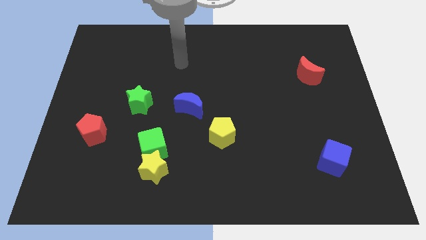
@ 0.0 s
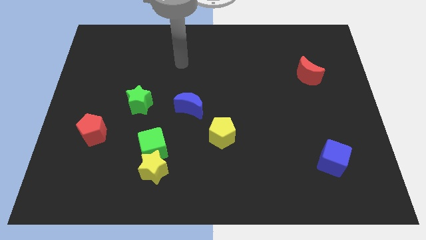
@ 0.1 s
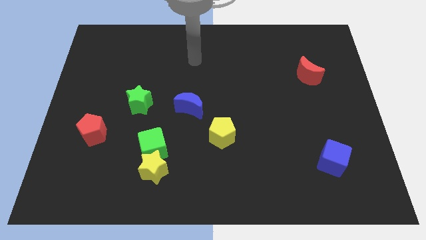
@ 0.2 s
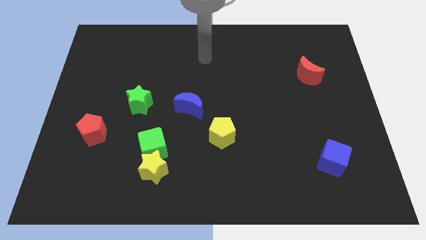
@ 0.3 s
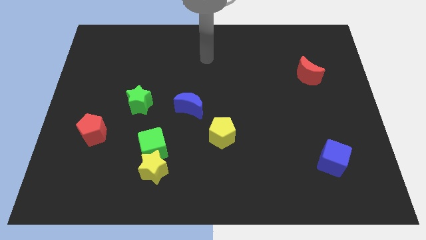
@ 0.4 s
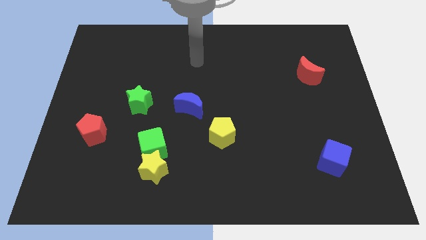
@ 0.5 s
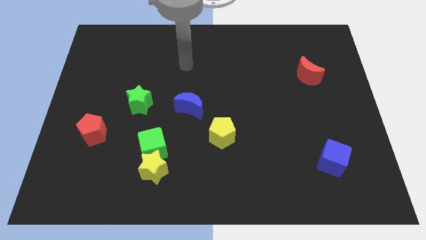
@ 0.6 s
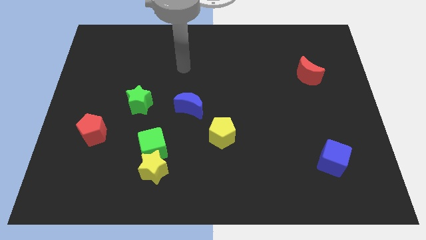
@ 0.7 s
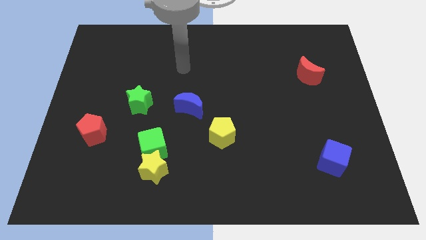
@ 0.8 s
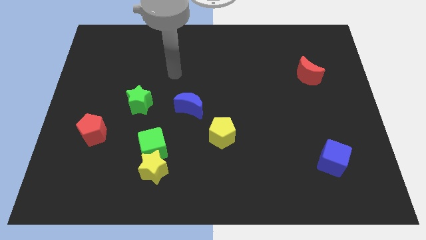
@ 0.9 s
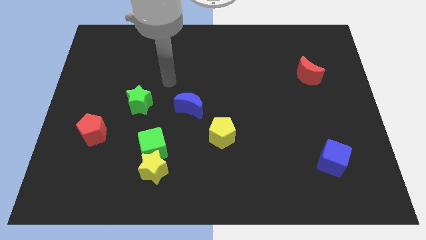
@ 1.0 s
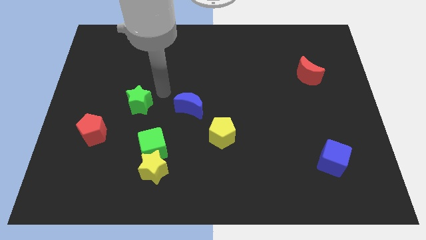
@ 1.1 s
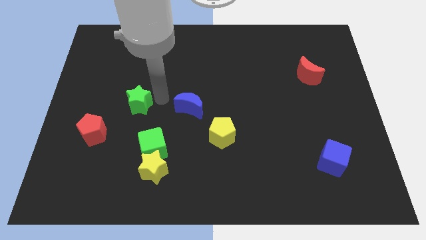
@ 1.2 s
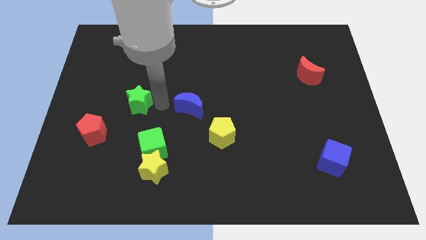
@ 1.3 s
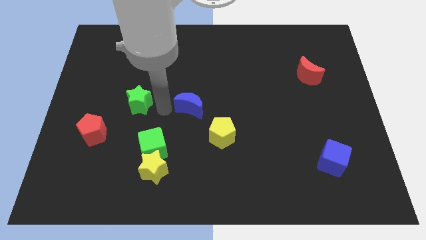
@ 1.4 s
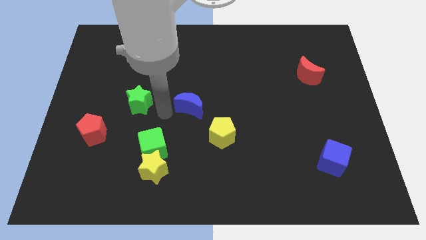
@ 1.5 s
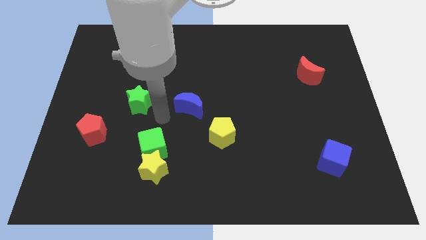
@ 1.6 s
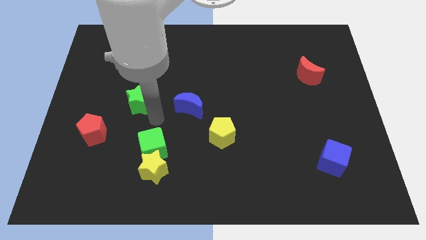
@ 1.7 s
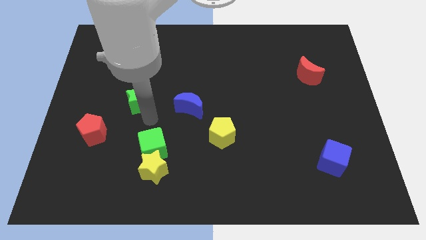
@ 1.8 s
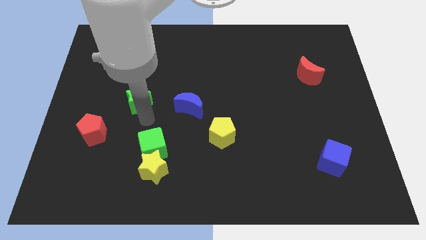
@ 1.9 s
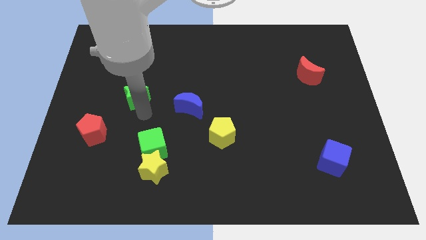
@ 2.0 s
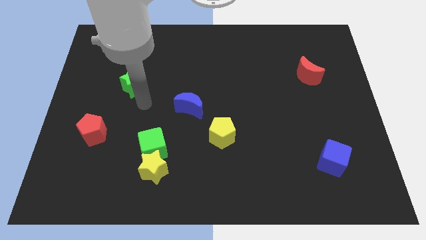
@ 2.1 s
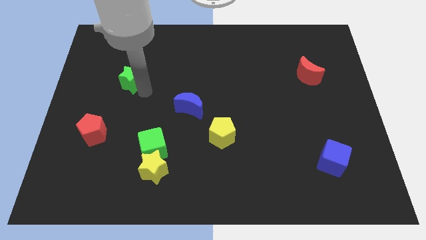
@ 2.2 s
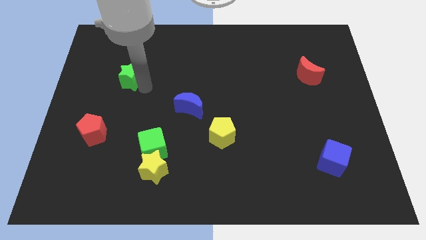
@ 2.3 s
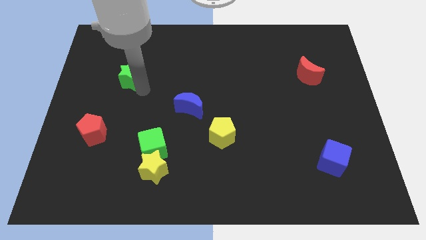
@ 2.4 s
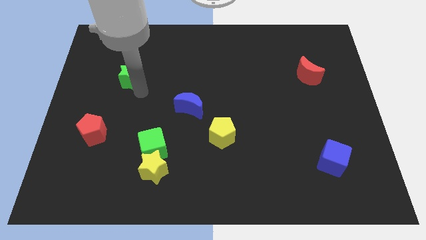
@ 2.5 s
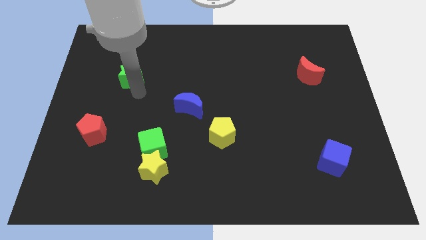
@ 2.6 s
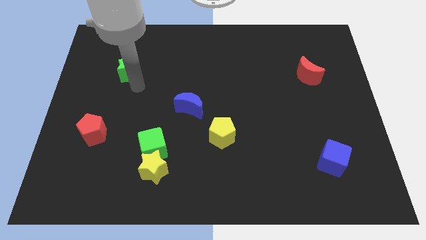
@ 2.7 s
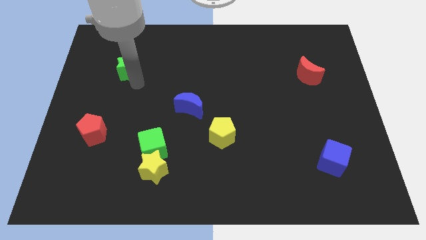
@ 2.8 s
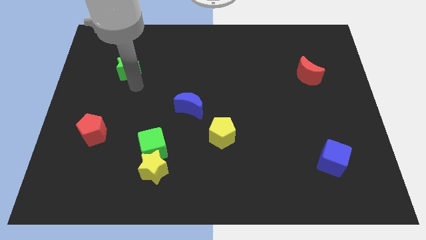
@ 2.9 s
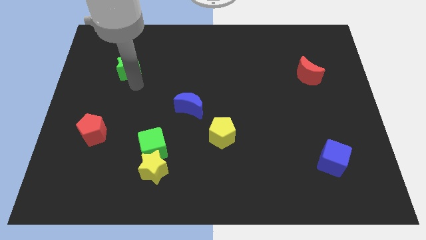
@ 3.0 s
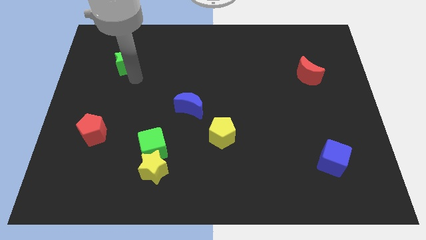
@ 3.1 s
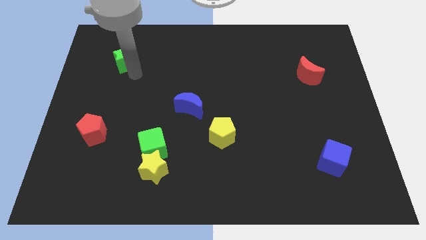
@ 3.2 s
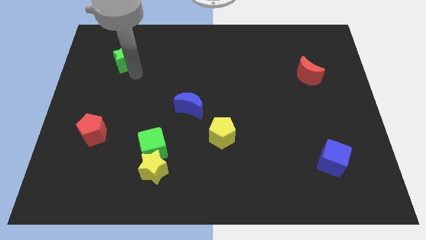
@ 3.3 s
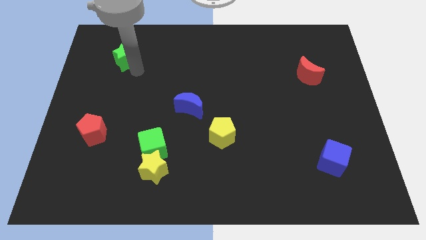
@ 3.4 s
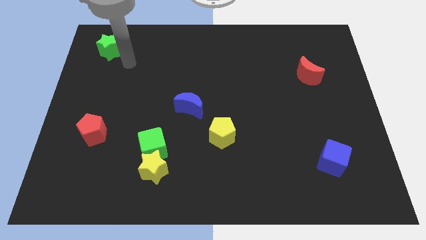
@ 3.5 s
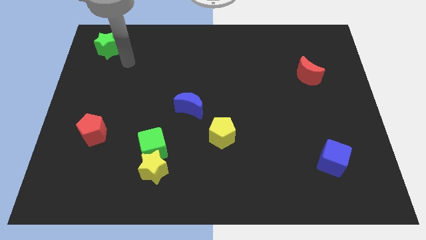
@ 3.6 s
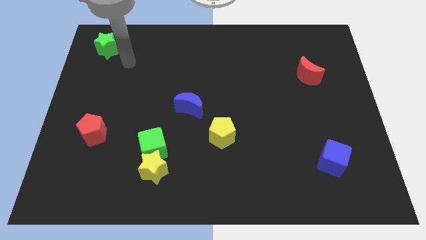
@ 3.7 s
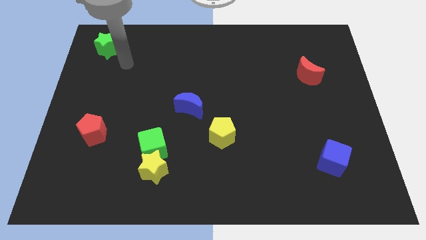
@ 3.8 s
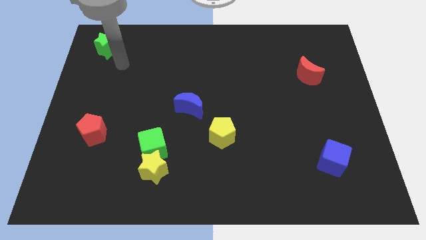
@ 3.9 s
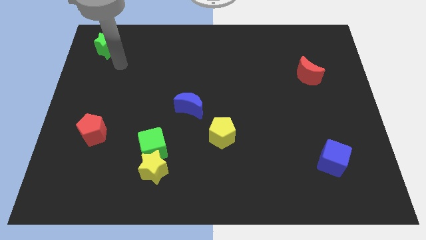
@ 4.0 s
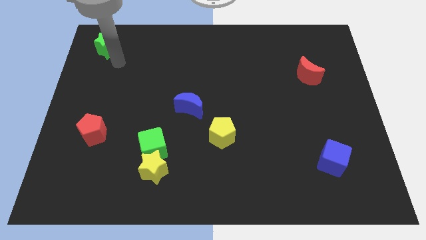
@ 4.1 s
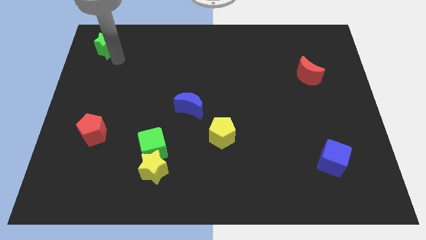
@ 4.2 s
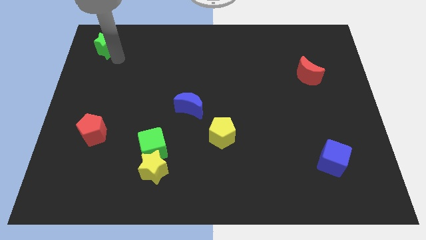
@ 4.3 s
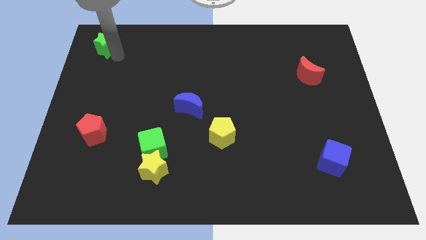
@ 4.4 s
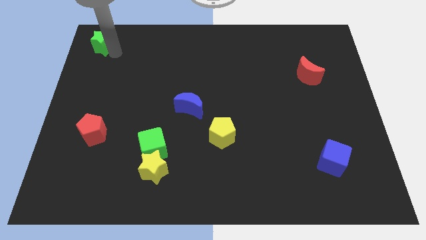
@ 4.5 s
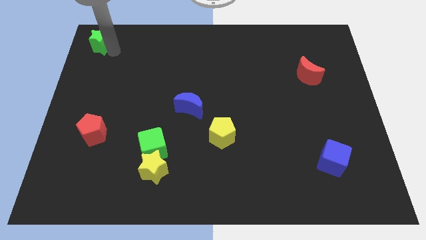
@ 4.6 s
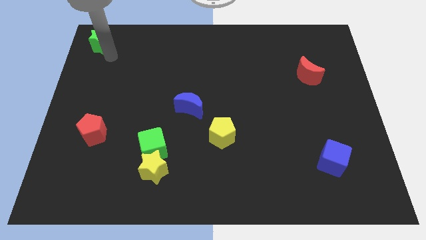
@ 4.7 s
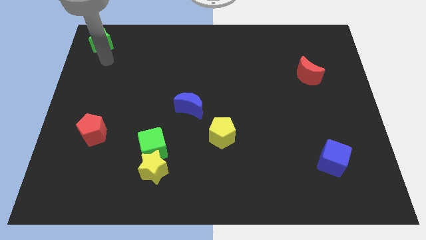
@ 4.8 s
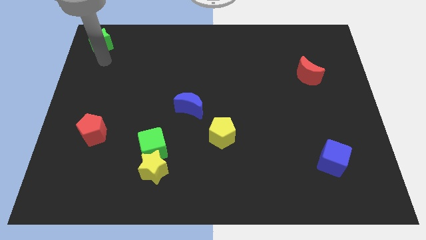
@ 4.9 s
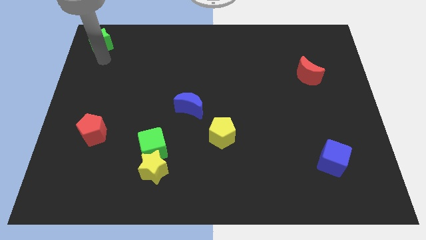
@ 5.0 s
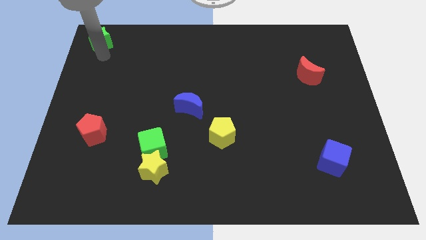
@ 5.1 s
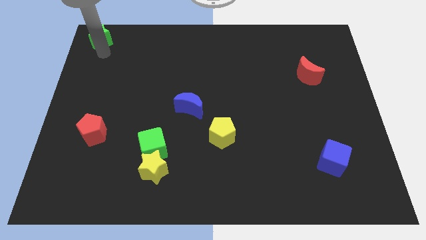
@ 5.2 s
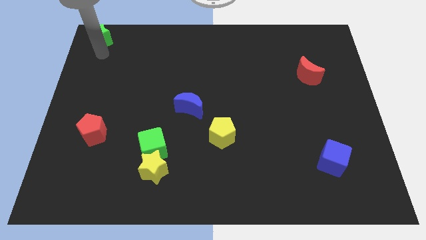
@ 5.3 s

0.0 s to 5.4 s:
push the green star to the top left corner of the board

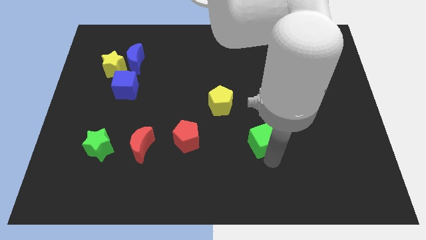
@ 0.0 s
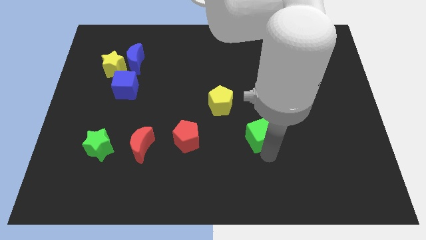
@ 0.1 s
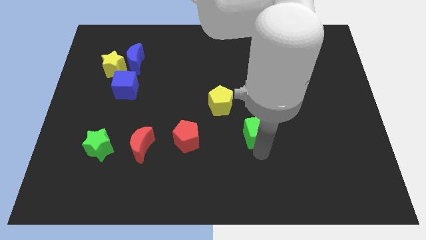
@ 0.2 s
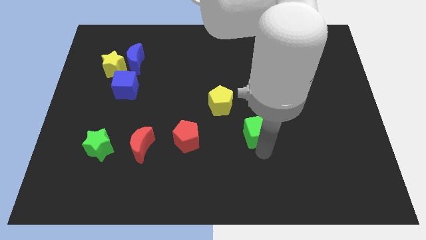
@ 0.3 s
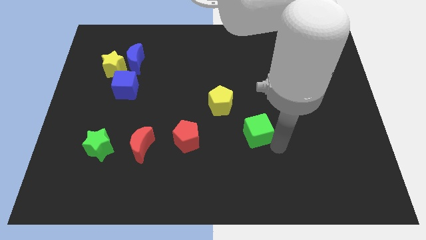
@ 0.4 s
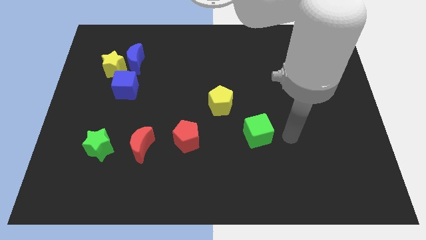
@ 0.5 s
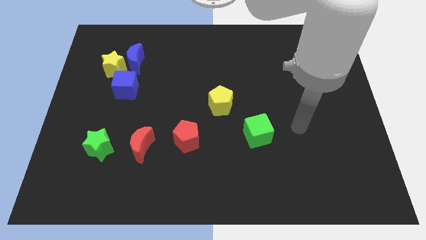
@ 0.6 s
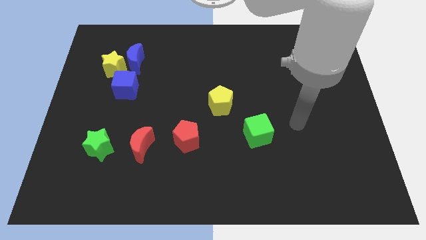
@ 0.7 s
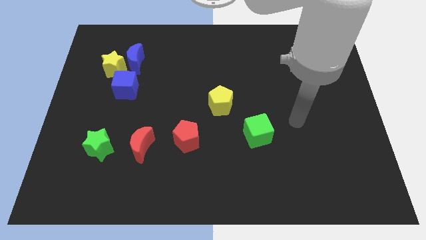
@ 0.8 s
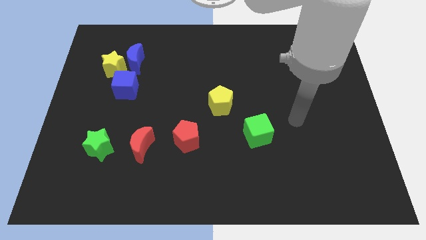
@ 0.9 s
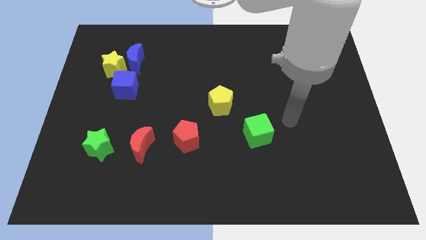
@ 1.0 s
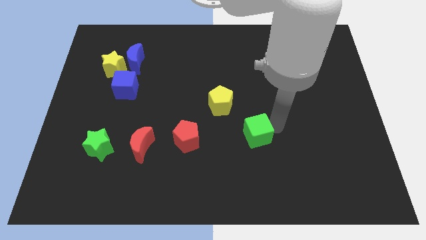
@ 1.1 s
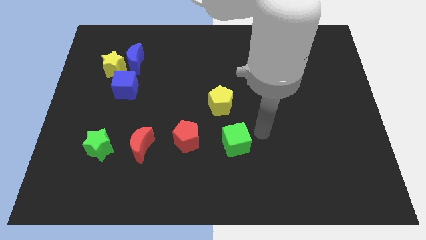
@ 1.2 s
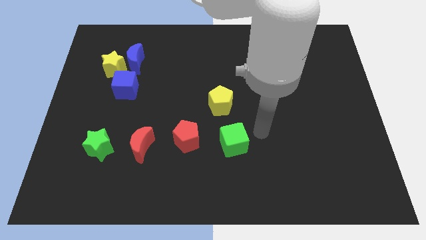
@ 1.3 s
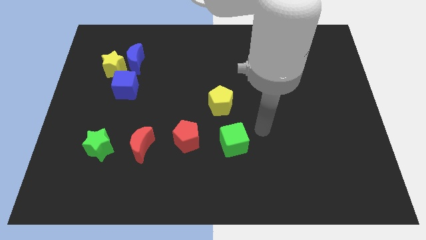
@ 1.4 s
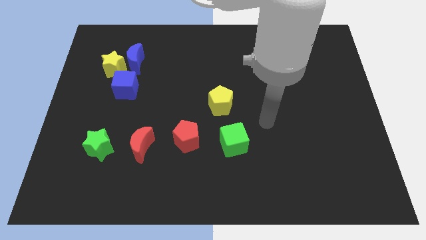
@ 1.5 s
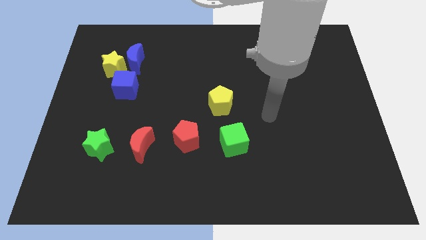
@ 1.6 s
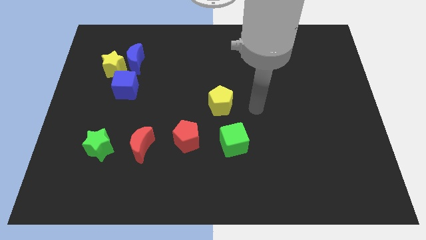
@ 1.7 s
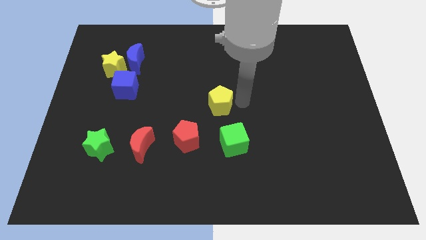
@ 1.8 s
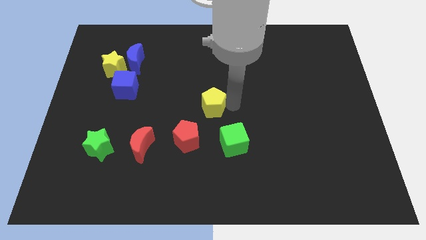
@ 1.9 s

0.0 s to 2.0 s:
slide the green cube slightly to the left side of the board

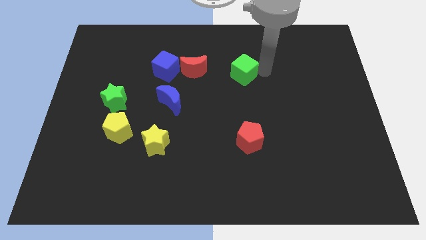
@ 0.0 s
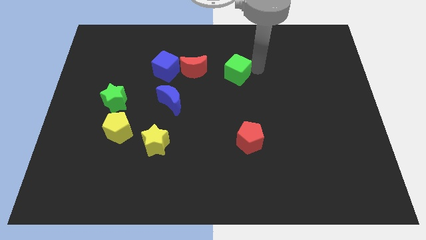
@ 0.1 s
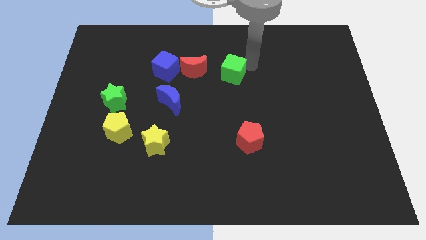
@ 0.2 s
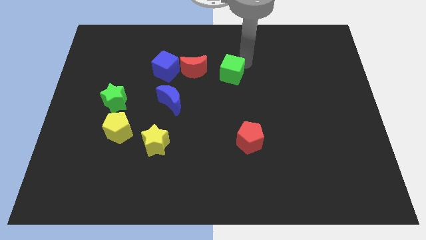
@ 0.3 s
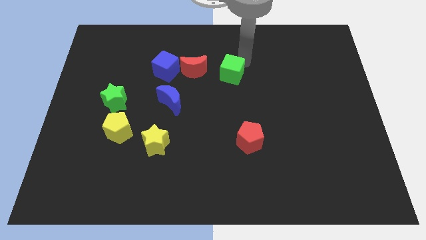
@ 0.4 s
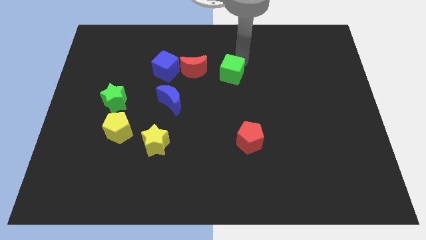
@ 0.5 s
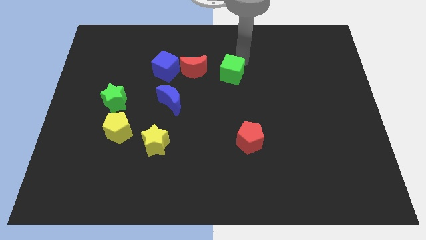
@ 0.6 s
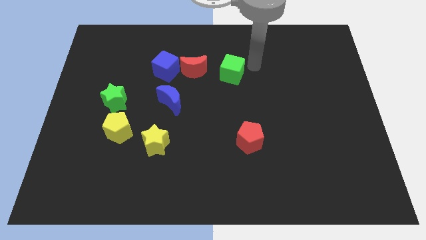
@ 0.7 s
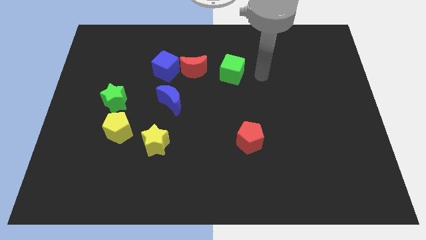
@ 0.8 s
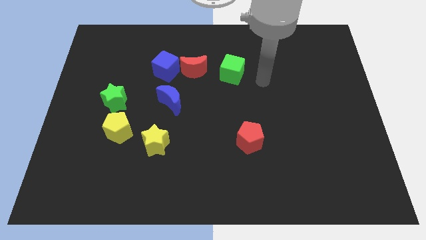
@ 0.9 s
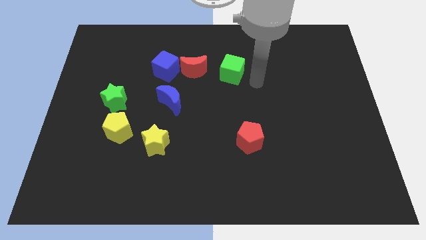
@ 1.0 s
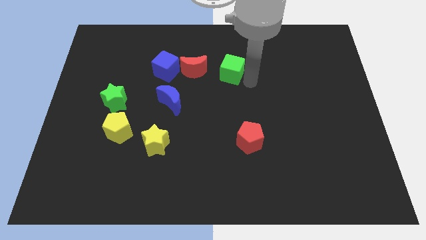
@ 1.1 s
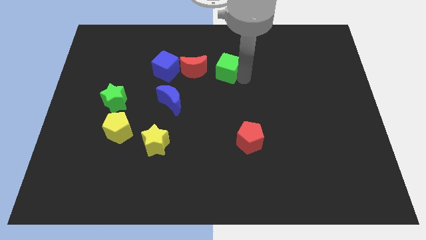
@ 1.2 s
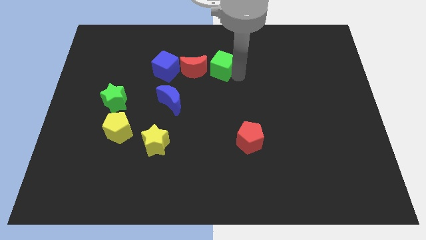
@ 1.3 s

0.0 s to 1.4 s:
place green cube to the right of red moon
